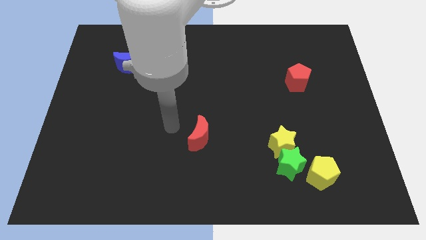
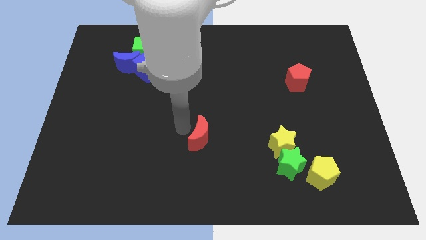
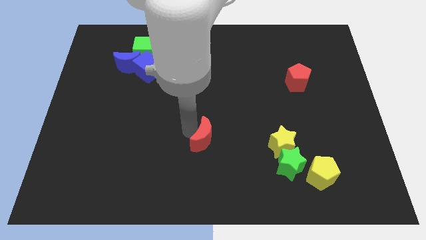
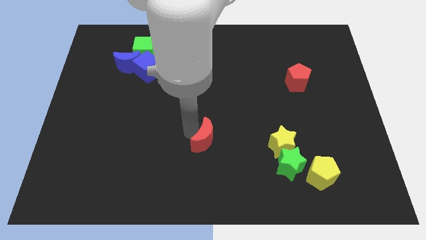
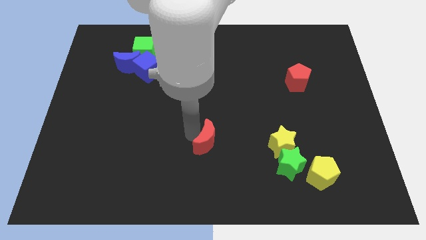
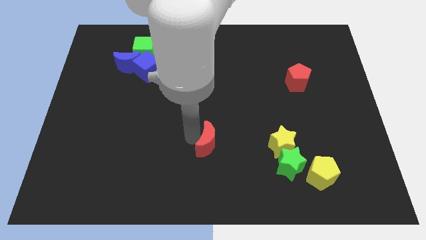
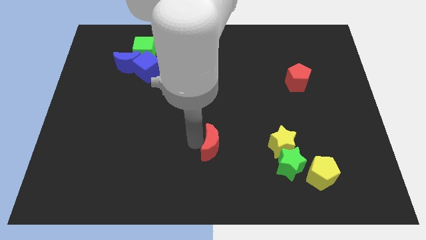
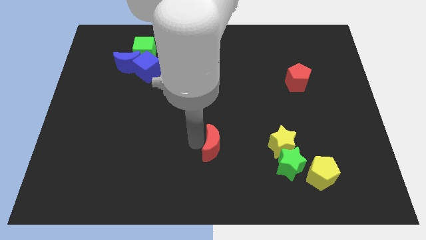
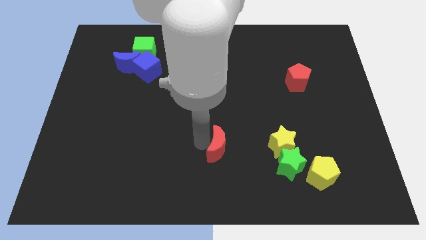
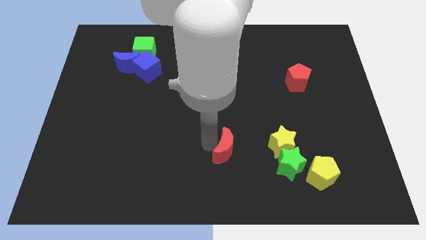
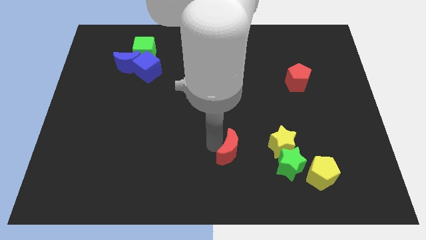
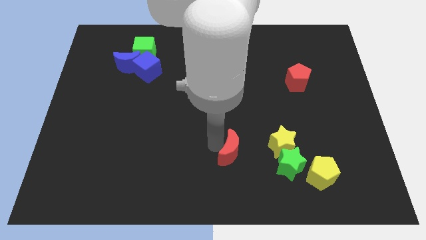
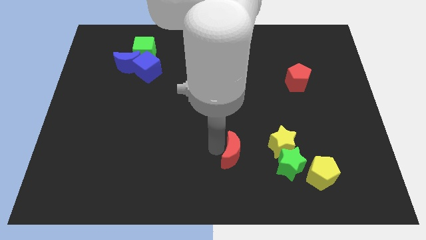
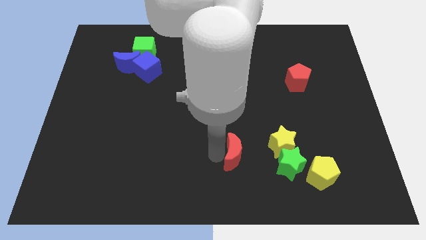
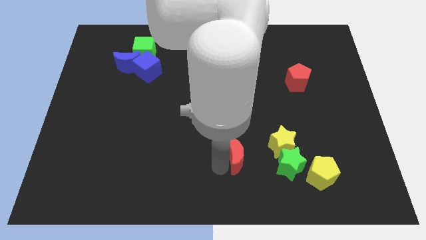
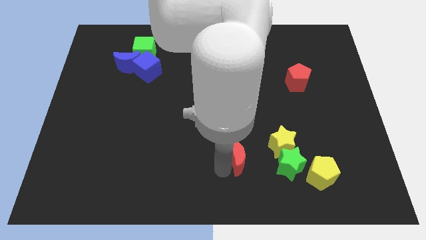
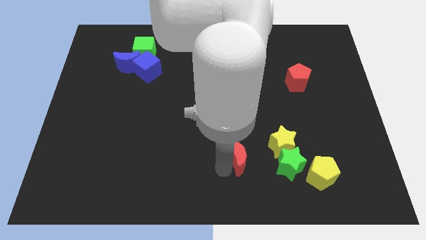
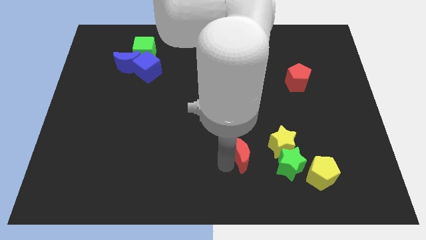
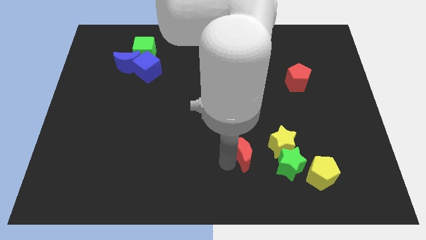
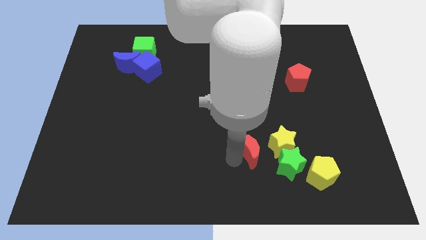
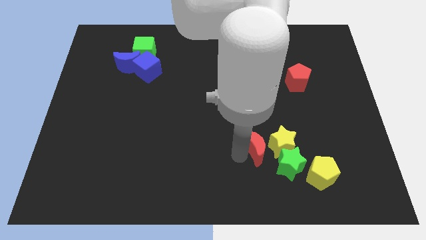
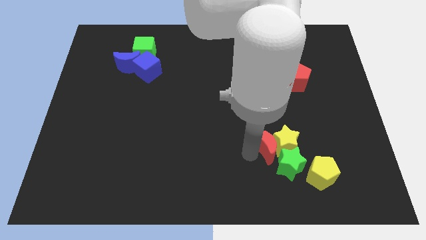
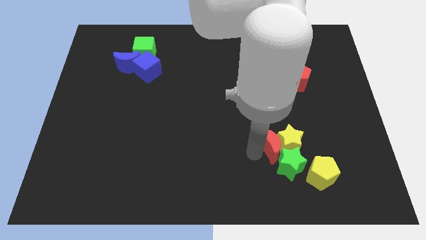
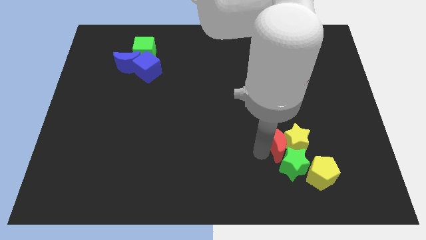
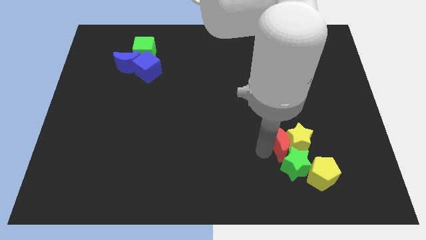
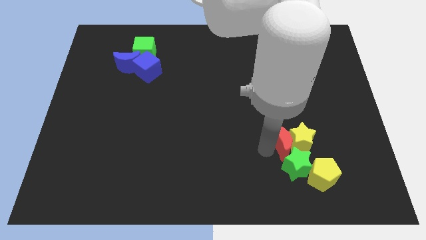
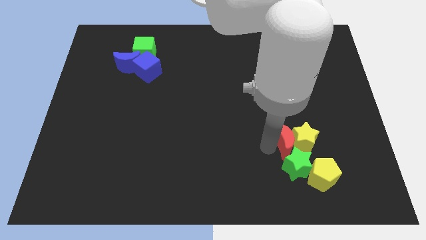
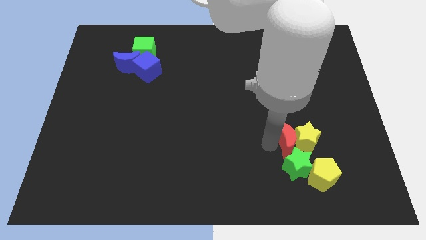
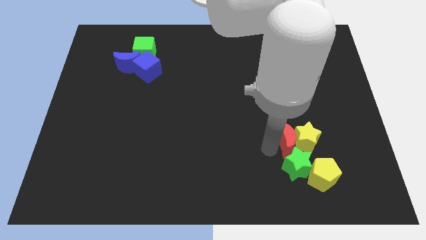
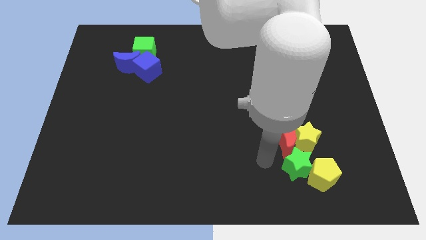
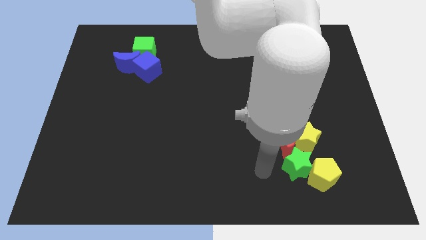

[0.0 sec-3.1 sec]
slide red moon close to yellow star

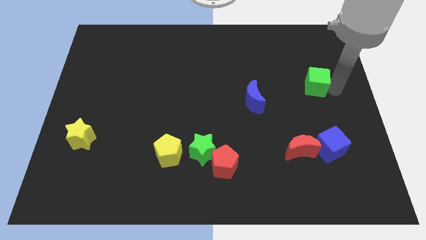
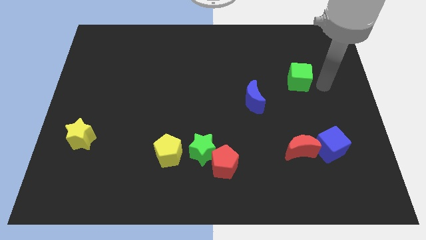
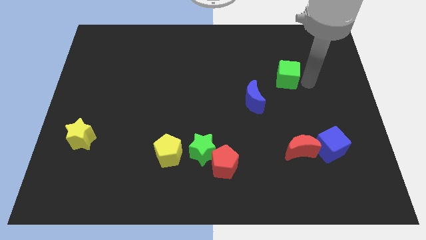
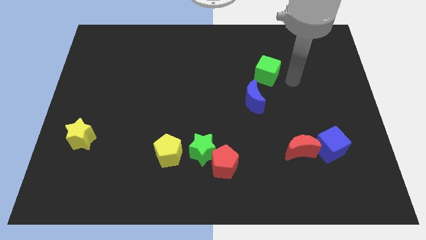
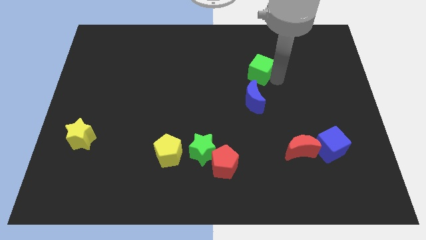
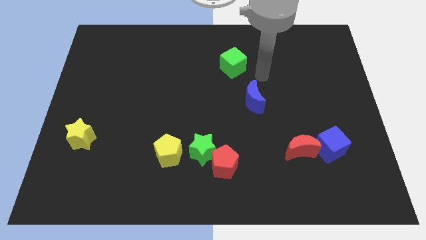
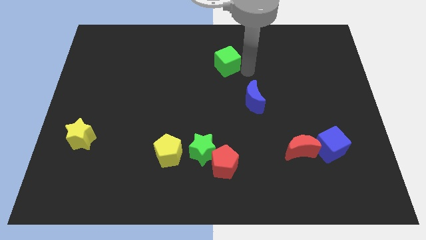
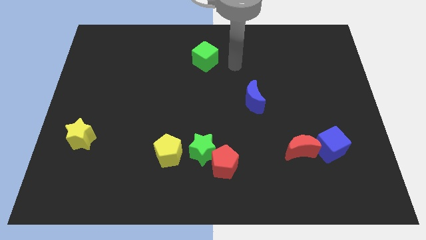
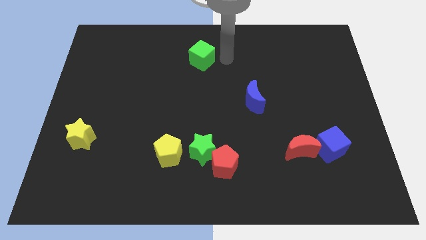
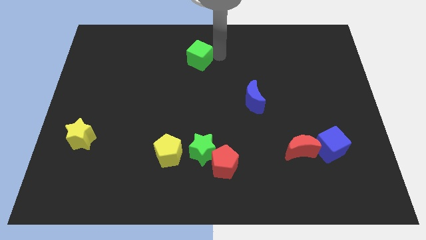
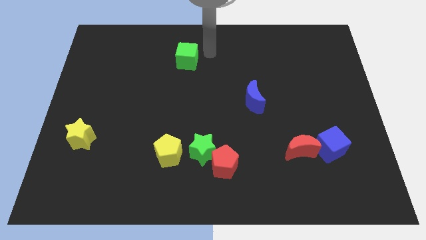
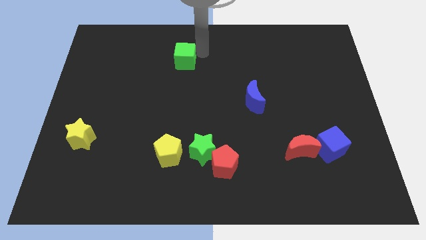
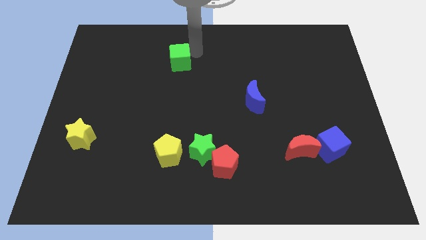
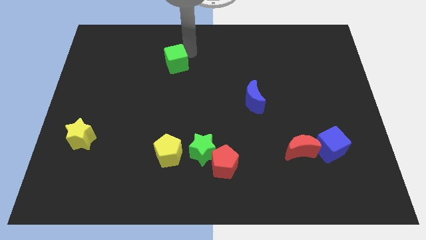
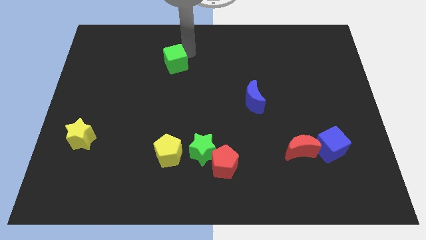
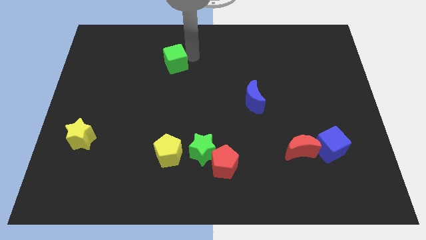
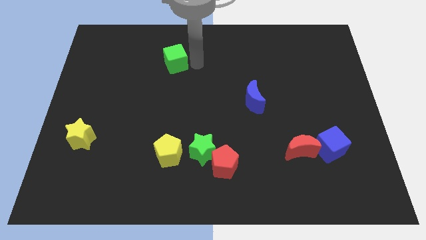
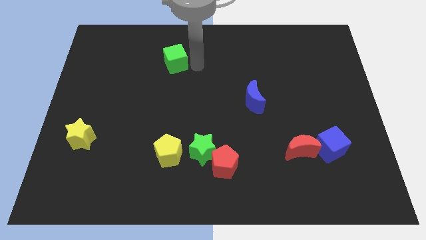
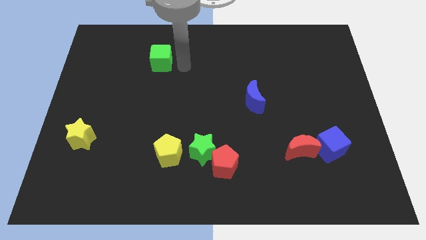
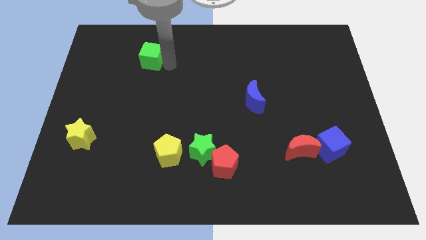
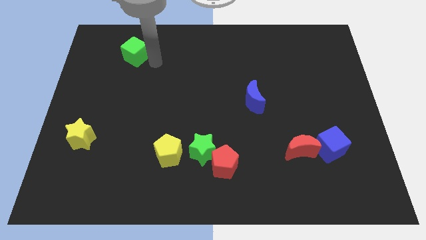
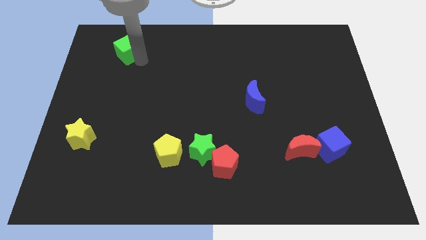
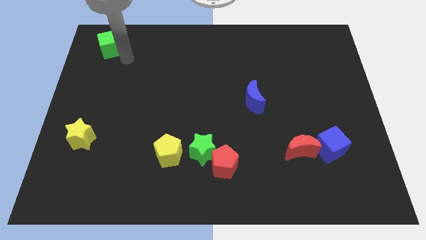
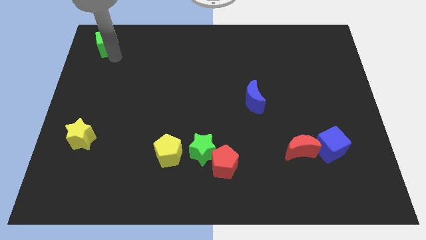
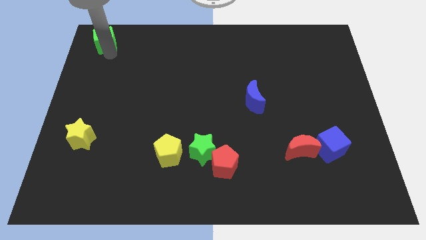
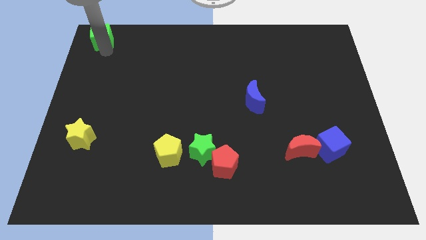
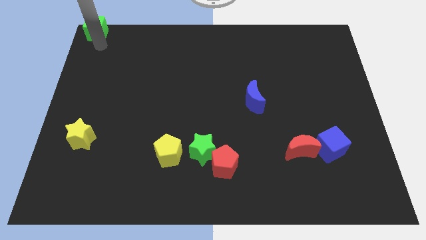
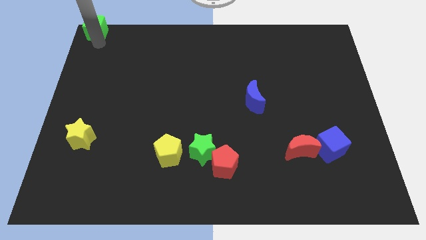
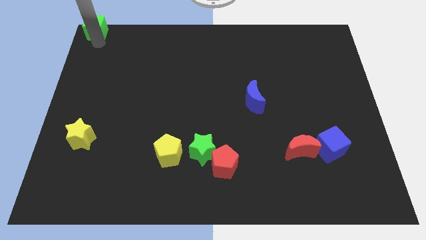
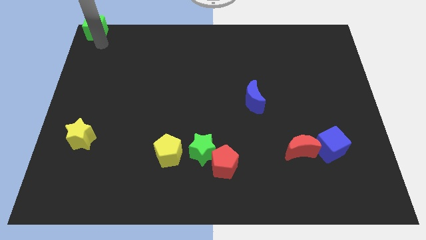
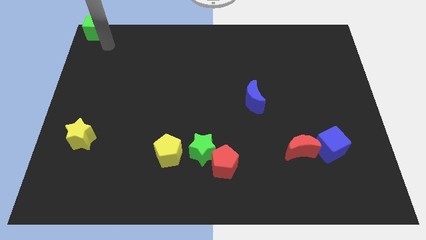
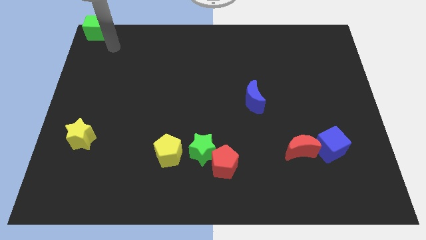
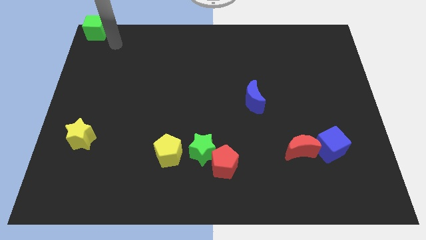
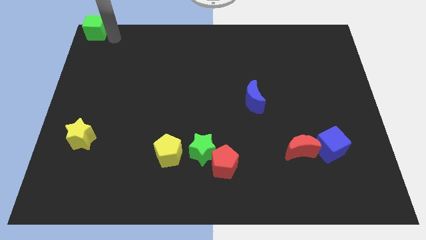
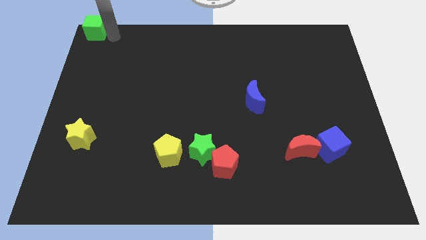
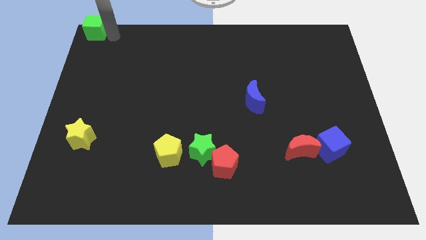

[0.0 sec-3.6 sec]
move the green cube to the top left corner of the board

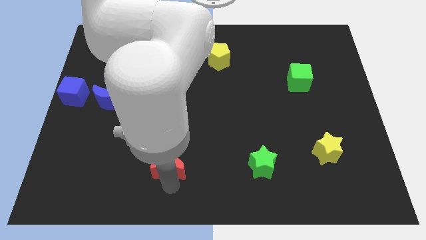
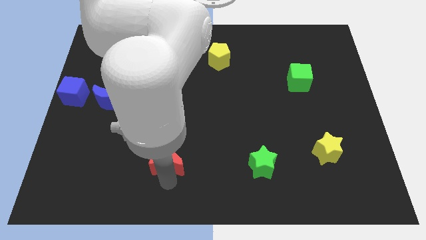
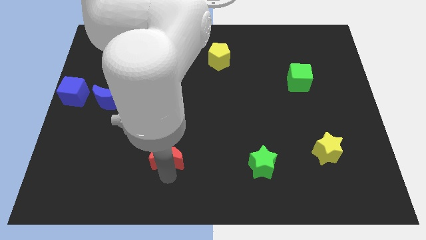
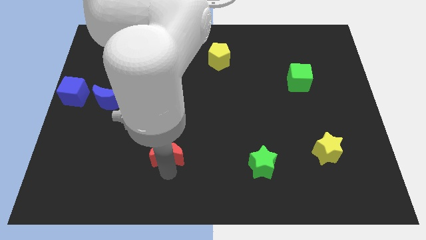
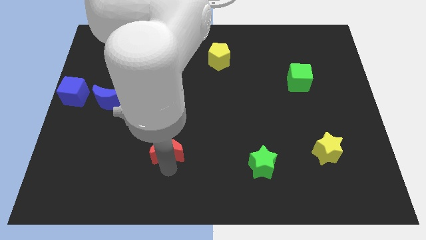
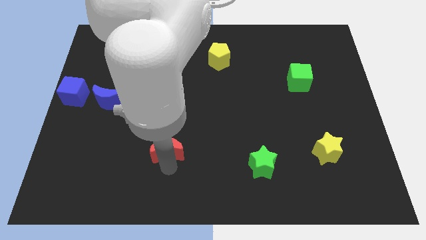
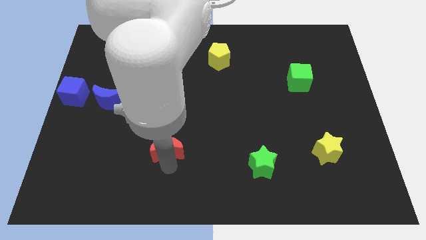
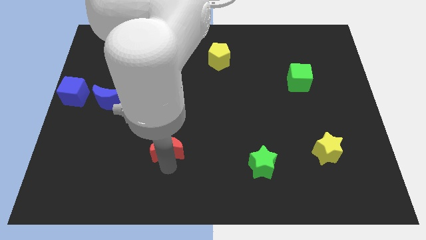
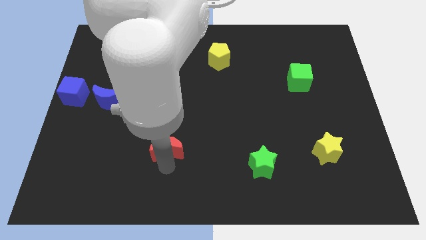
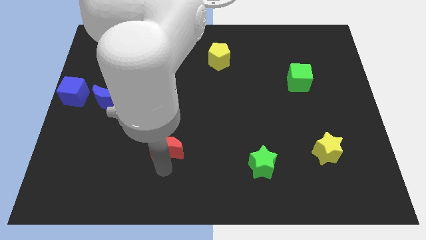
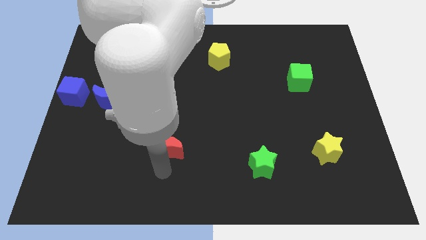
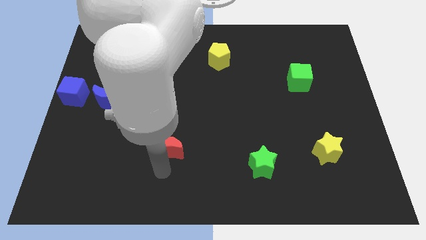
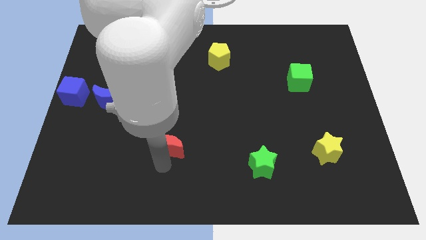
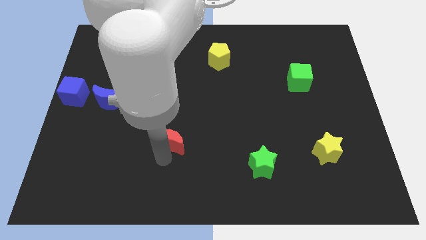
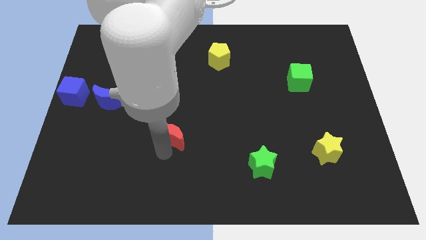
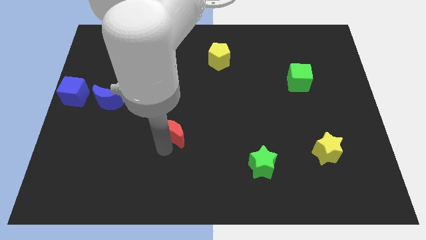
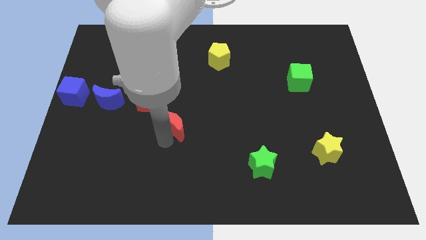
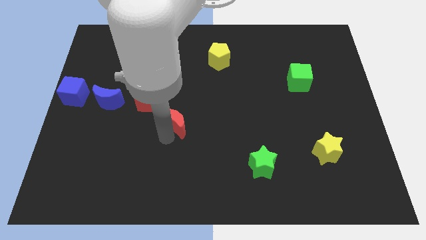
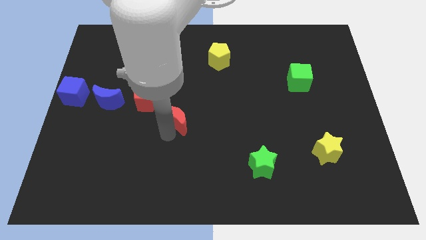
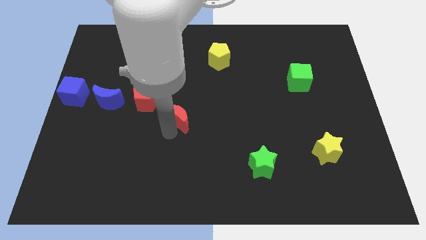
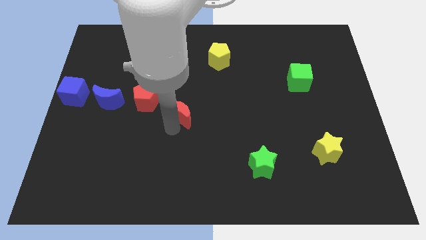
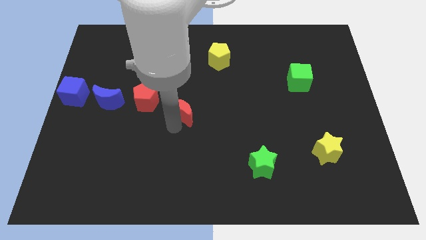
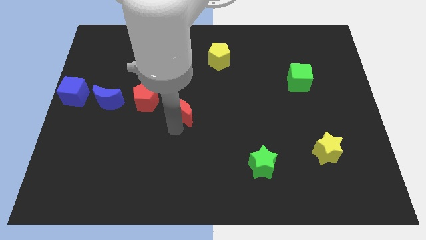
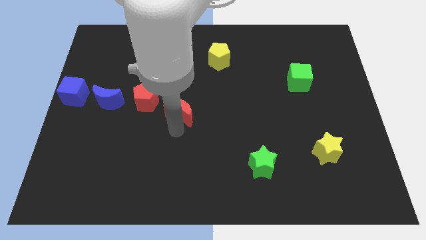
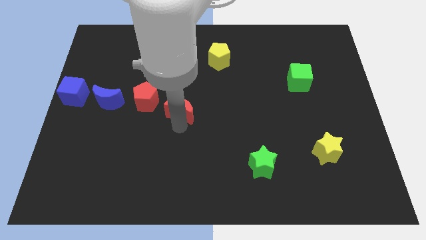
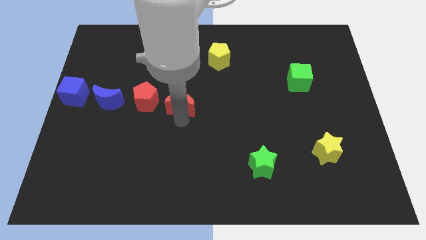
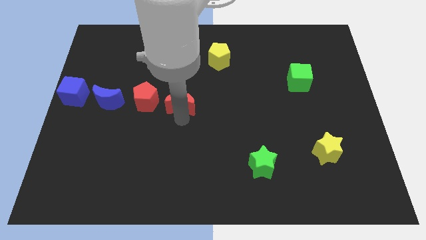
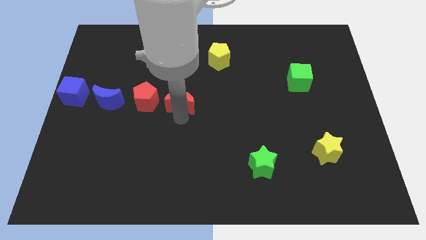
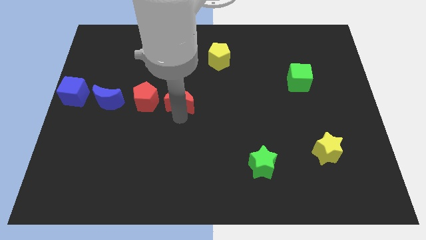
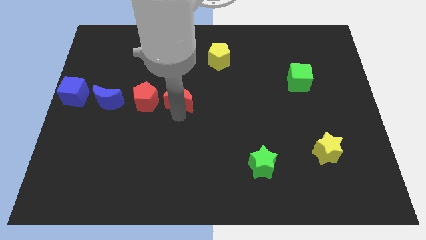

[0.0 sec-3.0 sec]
push the red moon upwards to the right side of the red pentagon
